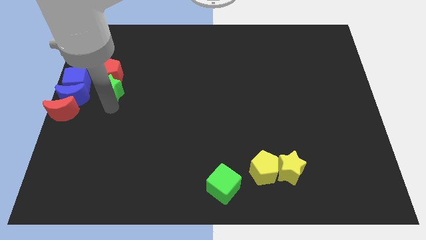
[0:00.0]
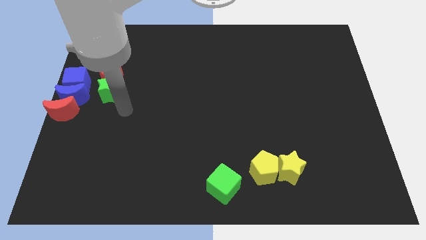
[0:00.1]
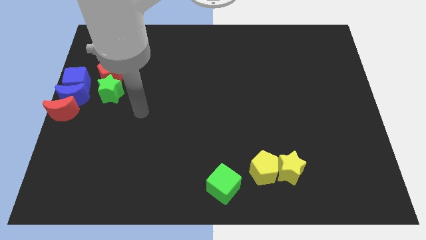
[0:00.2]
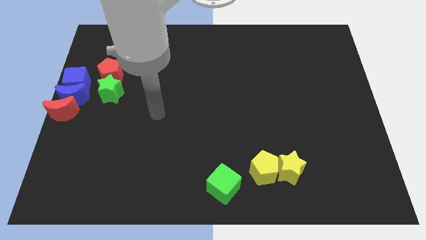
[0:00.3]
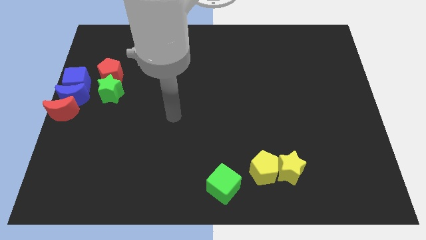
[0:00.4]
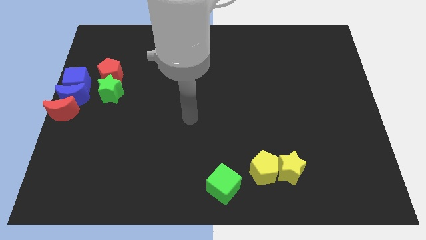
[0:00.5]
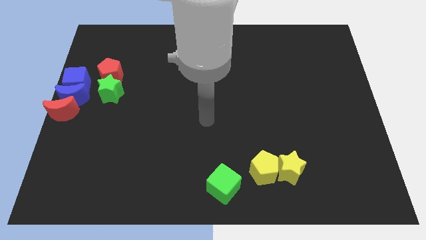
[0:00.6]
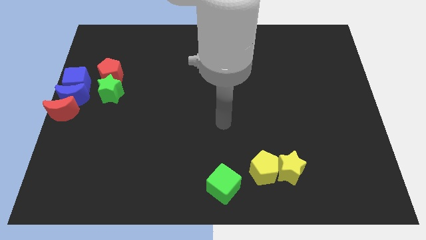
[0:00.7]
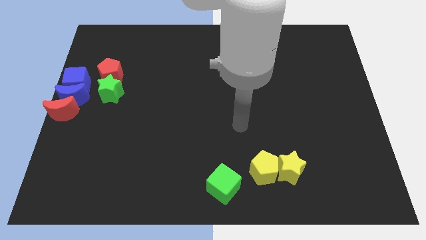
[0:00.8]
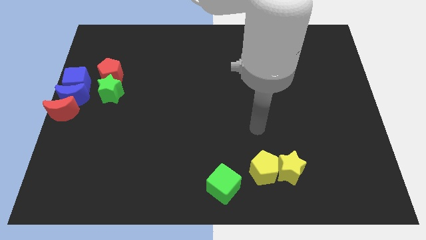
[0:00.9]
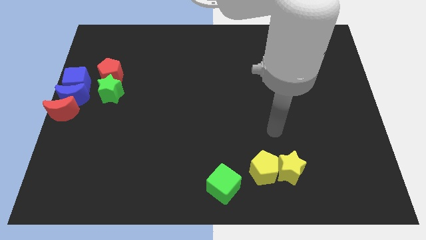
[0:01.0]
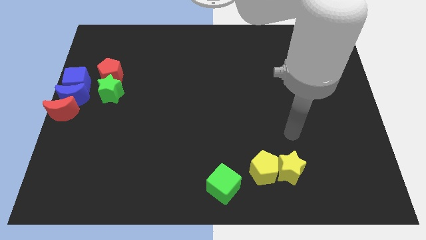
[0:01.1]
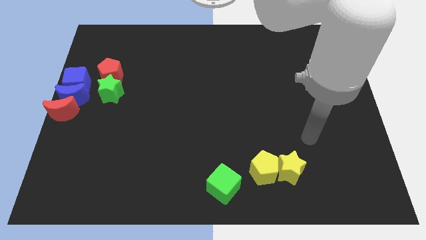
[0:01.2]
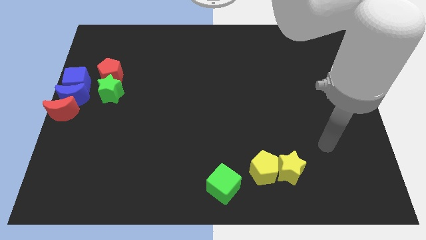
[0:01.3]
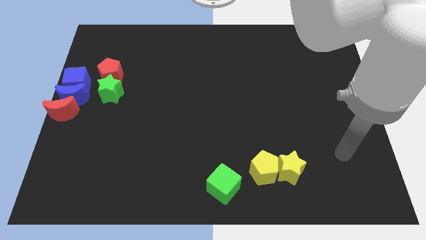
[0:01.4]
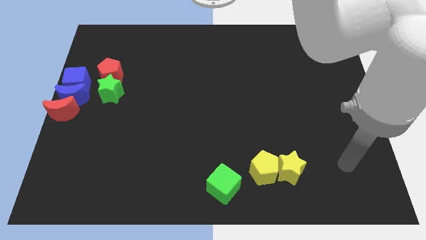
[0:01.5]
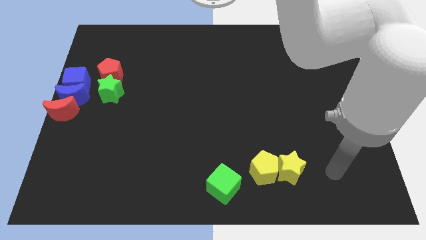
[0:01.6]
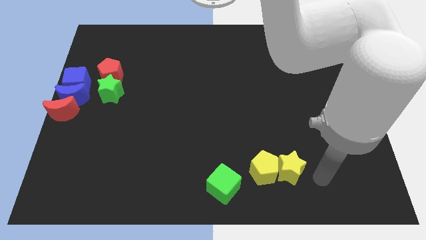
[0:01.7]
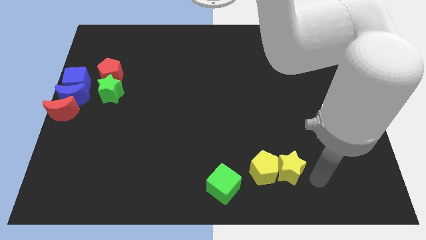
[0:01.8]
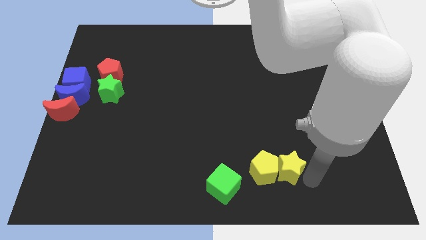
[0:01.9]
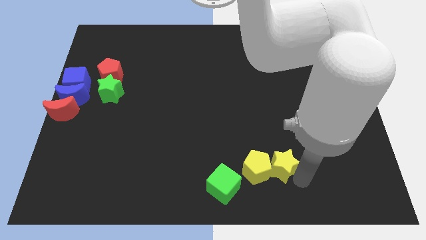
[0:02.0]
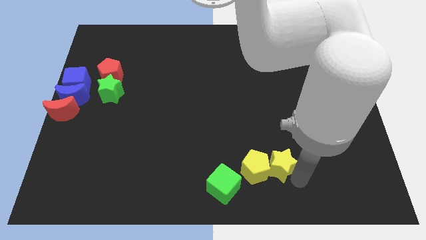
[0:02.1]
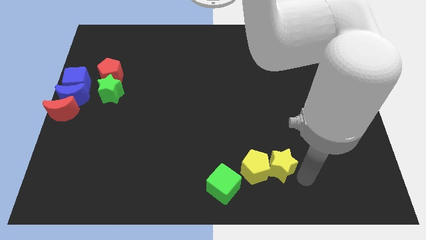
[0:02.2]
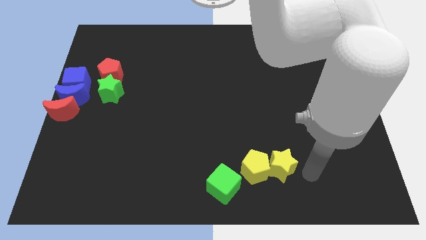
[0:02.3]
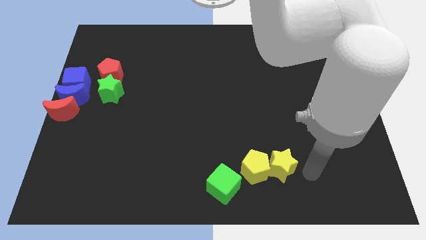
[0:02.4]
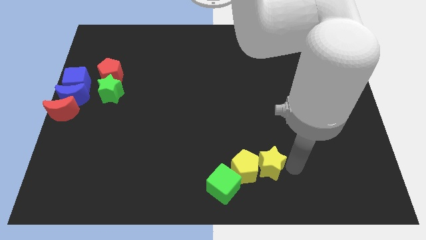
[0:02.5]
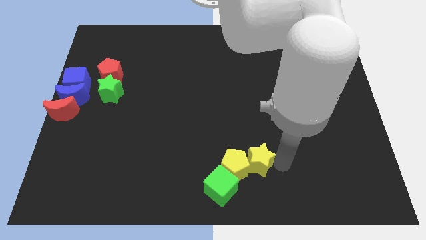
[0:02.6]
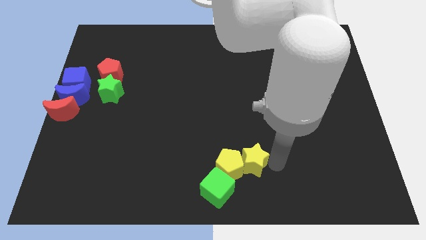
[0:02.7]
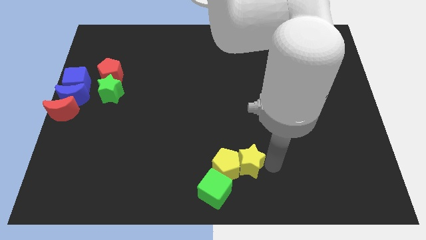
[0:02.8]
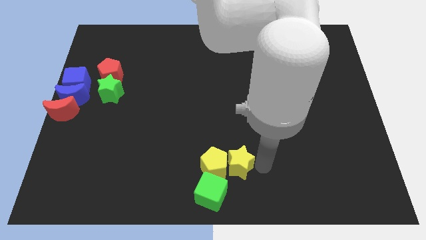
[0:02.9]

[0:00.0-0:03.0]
push the yellow star towards the yellow pentagon

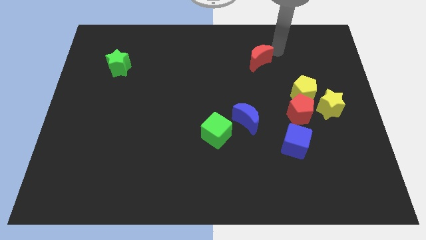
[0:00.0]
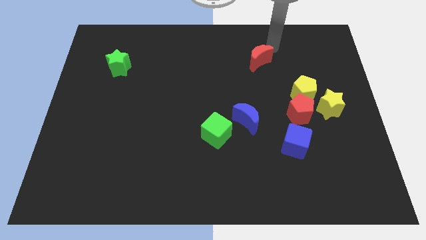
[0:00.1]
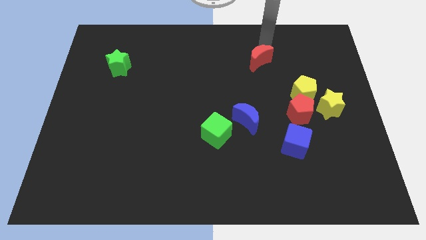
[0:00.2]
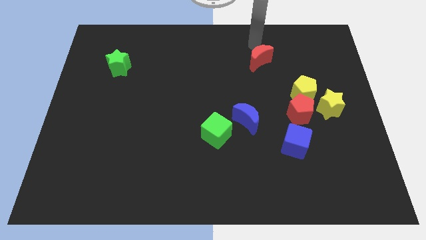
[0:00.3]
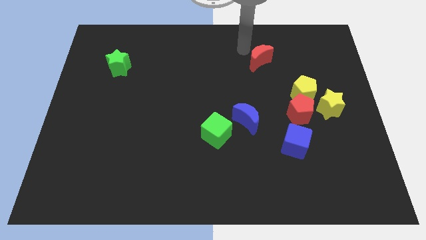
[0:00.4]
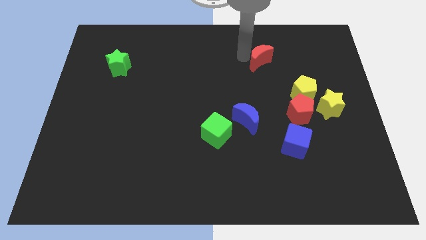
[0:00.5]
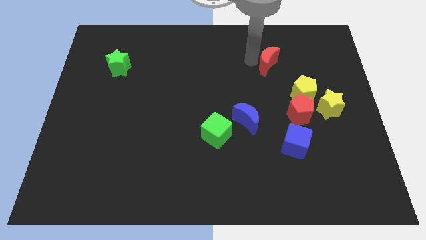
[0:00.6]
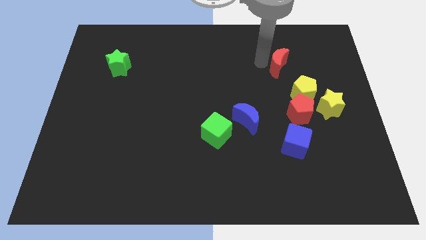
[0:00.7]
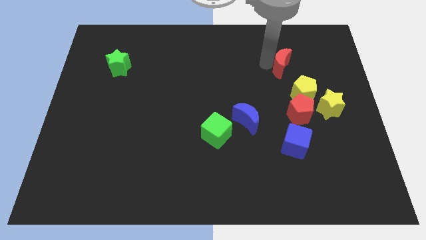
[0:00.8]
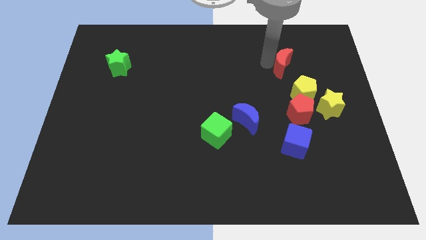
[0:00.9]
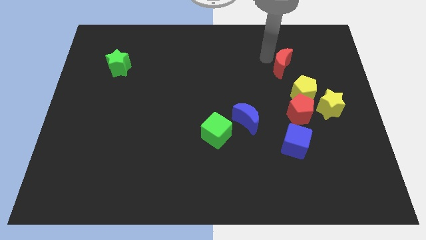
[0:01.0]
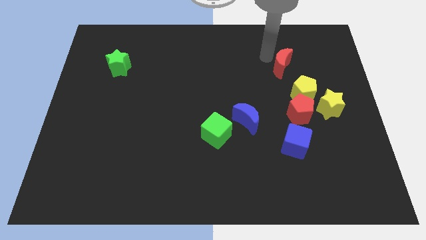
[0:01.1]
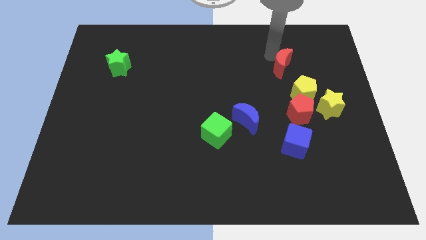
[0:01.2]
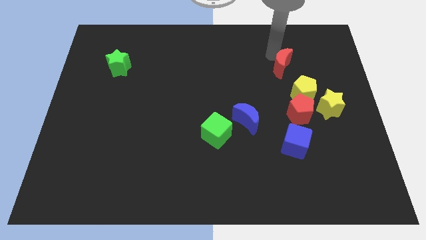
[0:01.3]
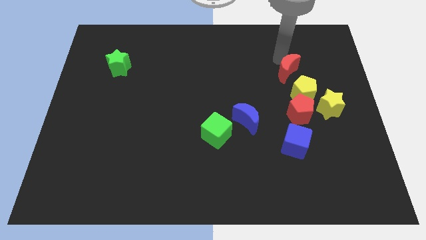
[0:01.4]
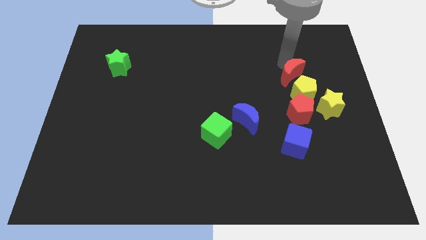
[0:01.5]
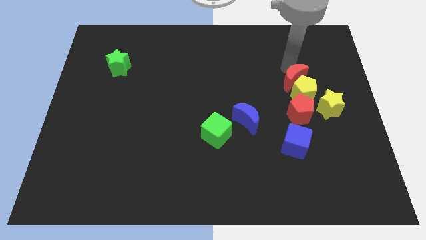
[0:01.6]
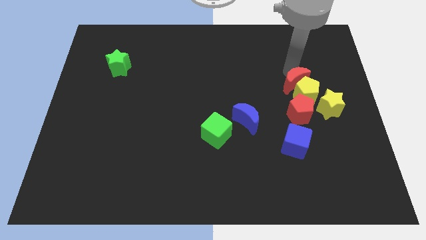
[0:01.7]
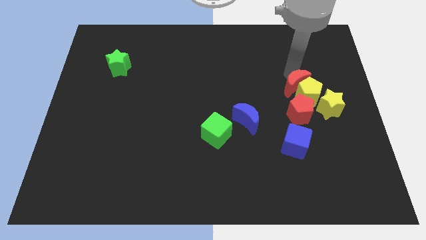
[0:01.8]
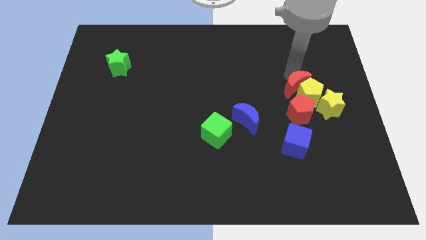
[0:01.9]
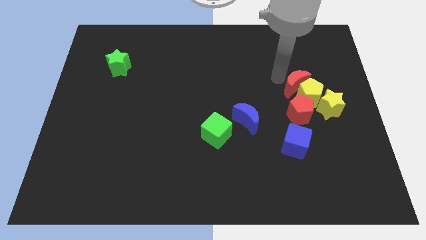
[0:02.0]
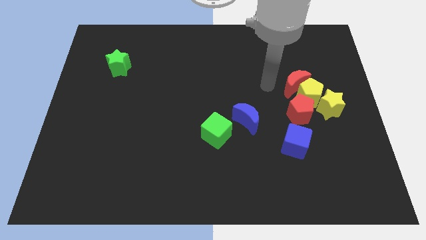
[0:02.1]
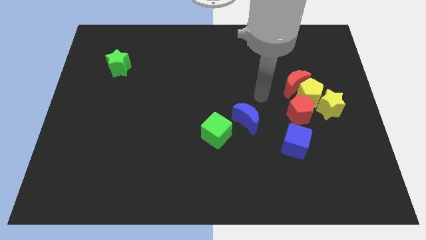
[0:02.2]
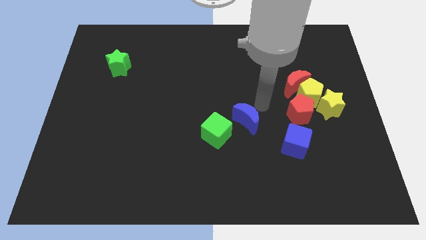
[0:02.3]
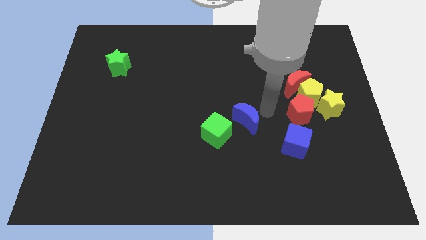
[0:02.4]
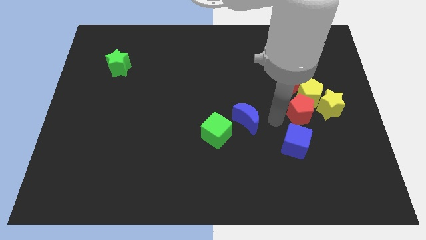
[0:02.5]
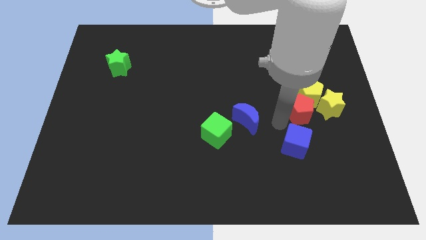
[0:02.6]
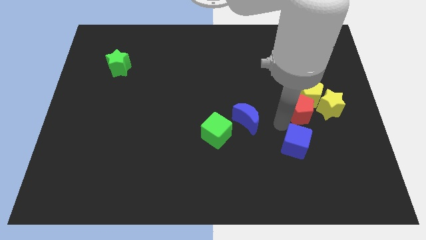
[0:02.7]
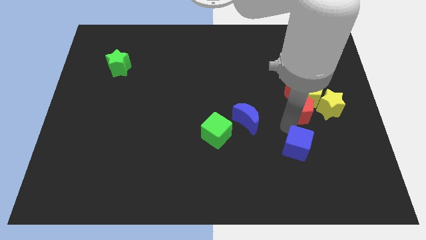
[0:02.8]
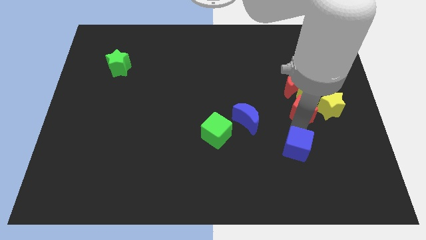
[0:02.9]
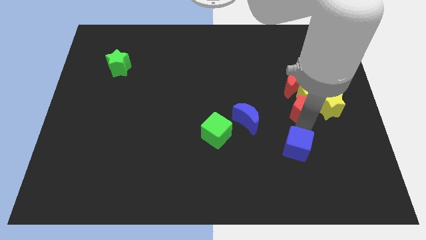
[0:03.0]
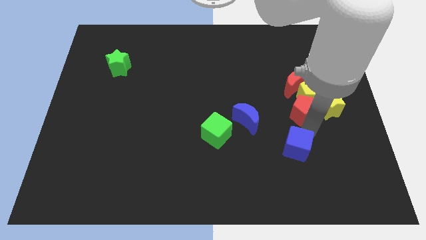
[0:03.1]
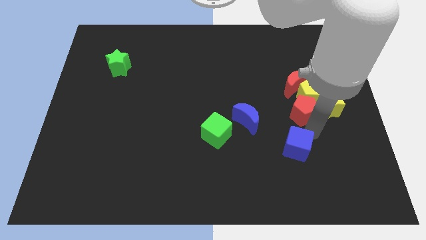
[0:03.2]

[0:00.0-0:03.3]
move the red crescent into the yellow pentagon

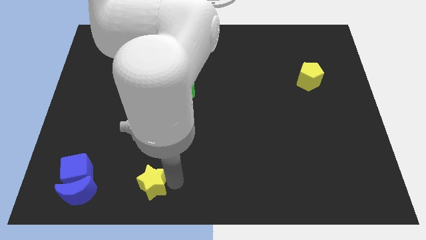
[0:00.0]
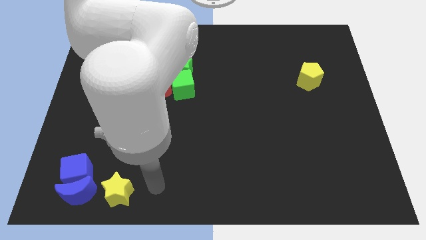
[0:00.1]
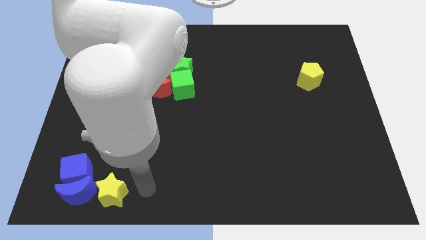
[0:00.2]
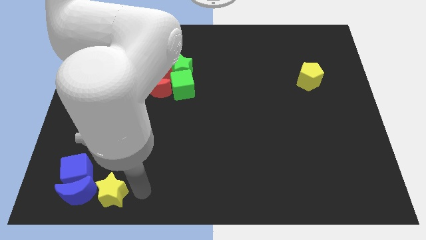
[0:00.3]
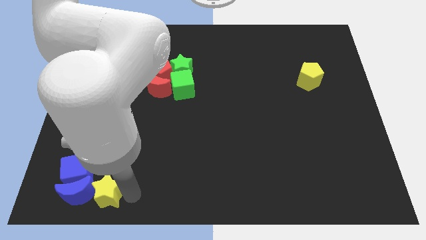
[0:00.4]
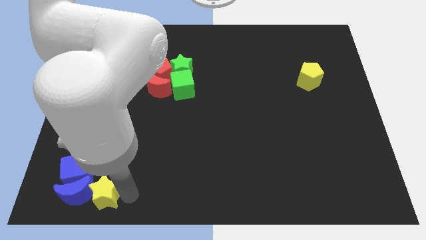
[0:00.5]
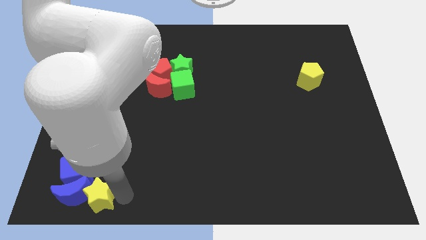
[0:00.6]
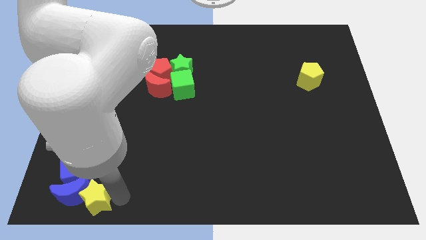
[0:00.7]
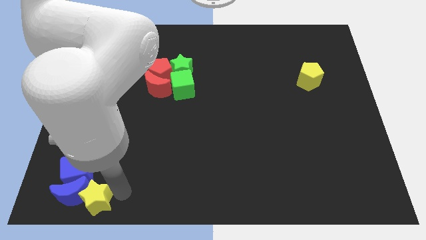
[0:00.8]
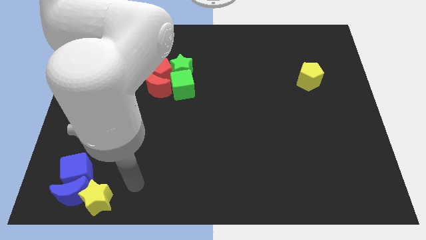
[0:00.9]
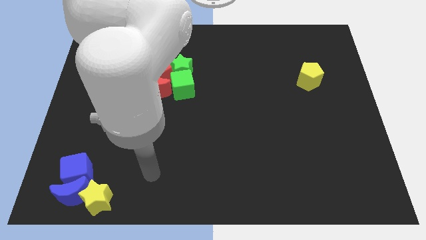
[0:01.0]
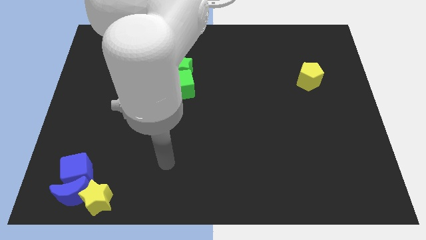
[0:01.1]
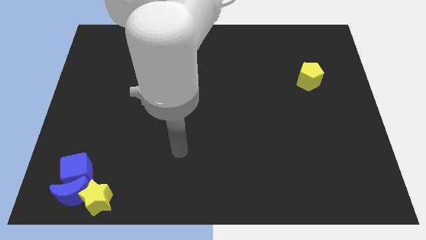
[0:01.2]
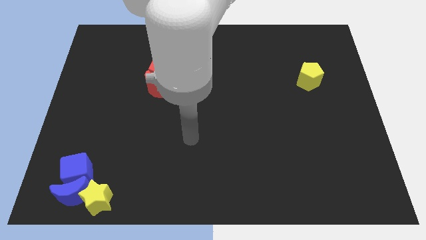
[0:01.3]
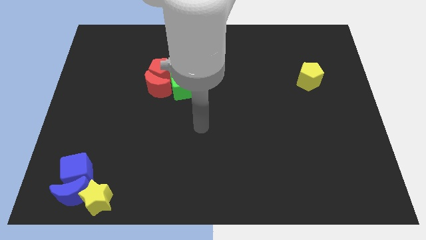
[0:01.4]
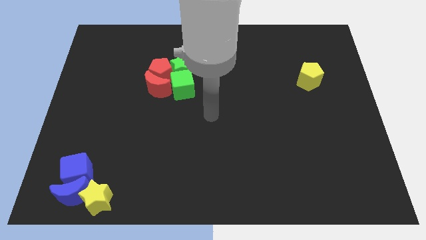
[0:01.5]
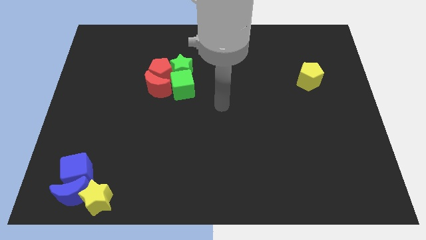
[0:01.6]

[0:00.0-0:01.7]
push the yellow star into the blue moon

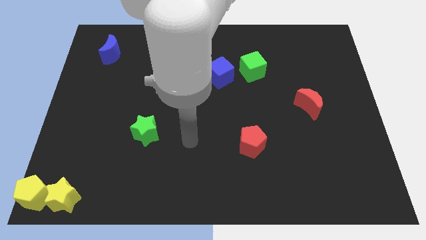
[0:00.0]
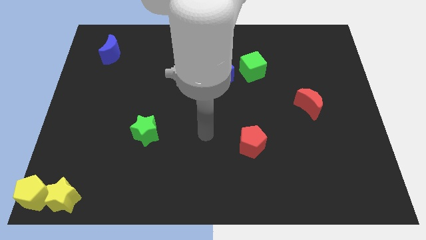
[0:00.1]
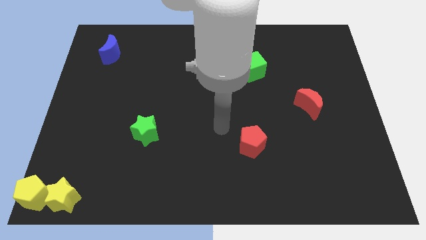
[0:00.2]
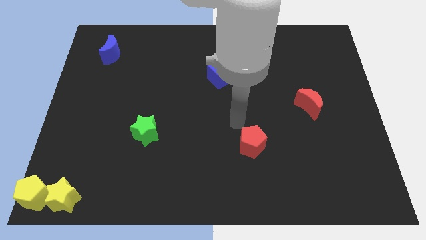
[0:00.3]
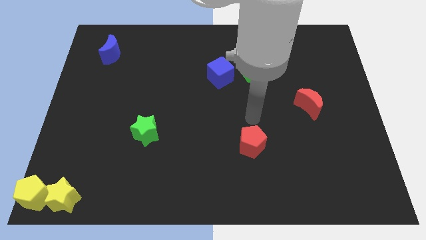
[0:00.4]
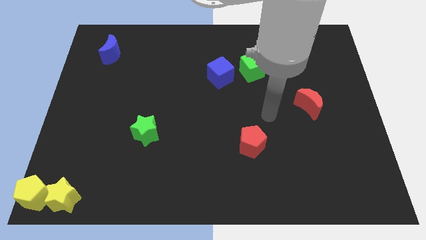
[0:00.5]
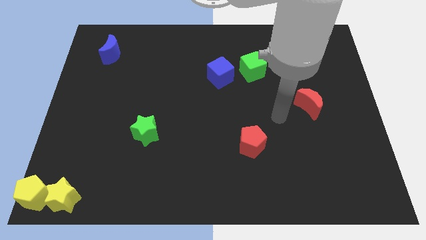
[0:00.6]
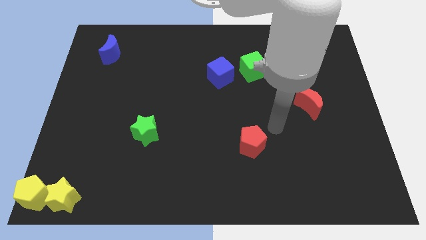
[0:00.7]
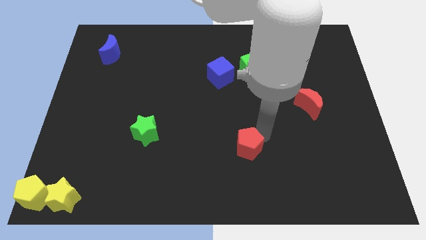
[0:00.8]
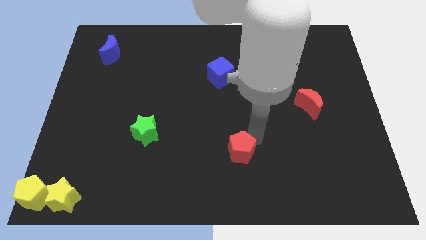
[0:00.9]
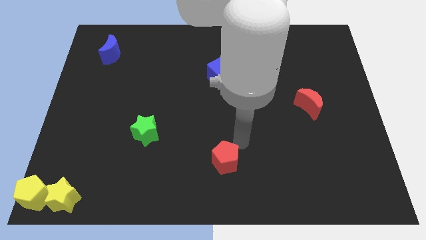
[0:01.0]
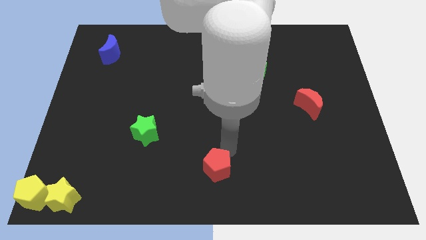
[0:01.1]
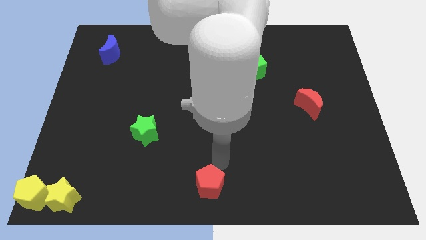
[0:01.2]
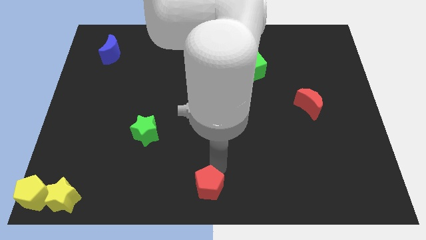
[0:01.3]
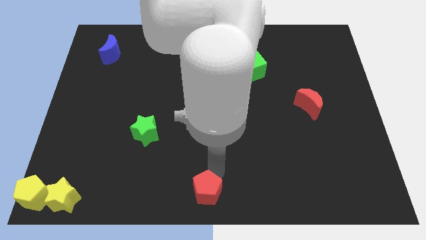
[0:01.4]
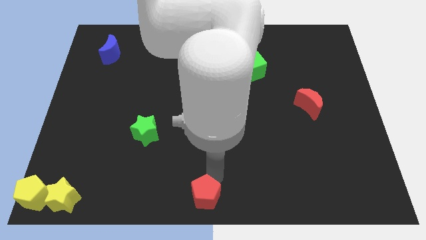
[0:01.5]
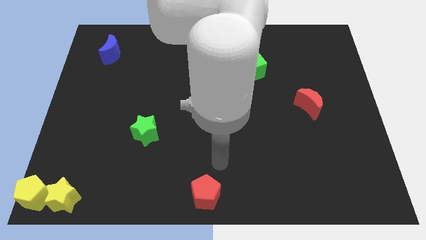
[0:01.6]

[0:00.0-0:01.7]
push the red pentagon to the bottom center of the board
